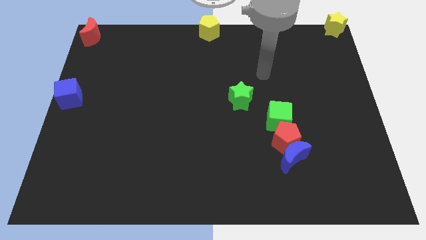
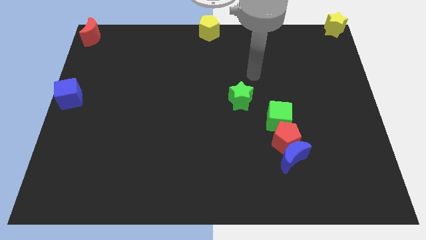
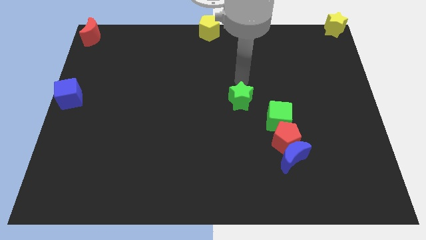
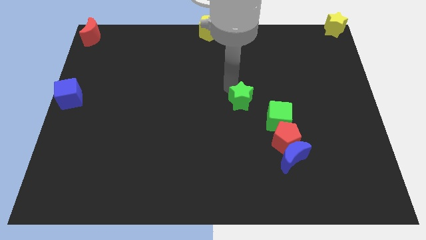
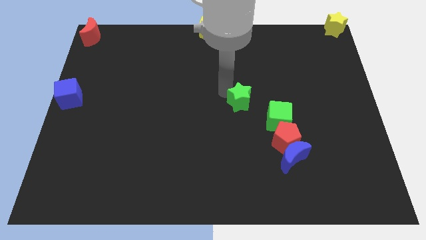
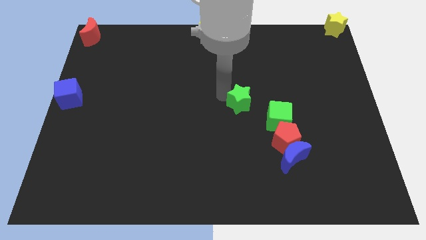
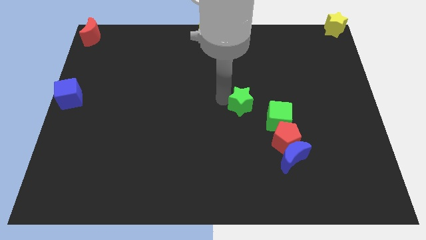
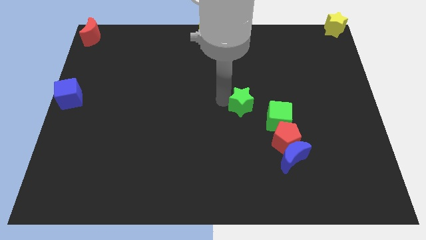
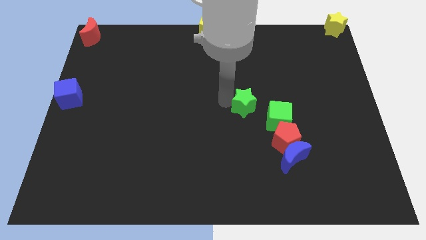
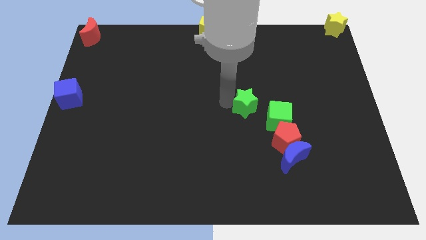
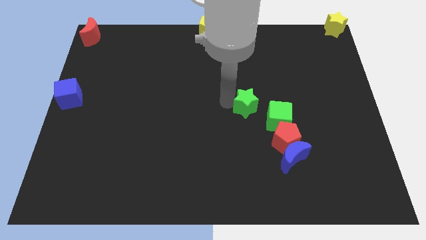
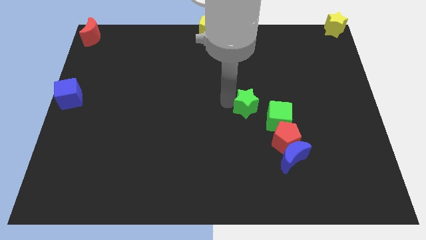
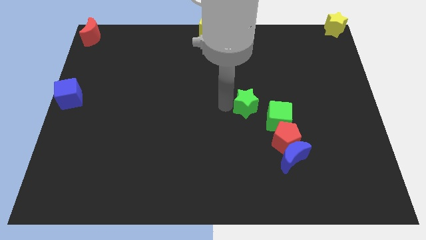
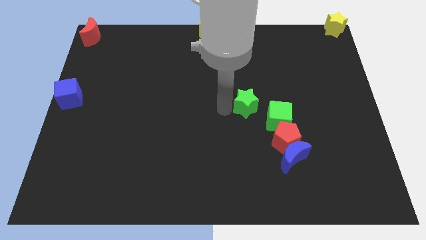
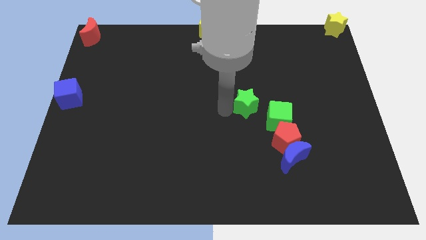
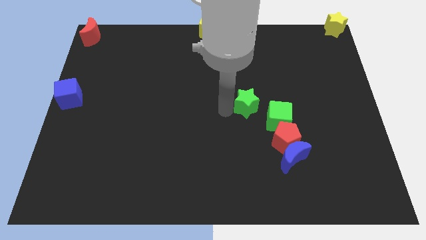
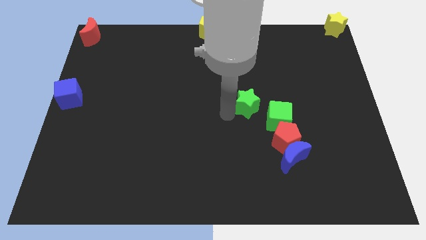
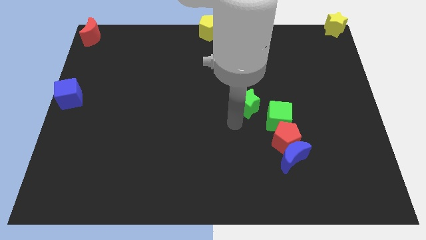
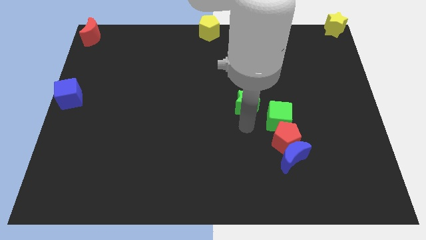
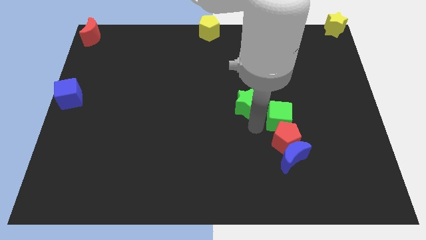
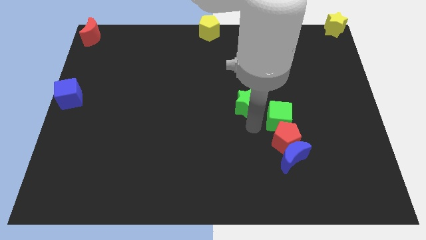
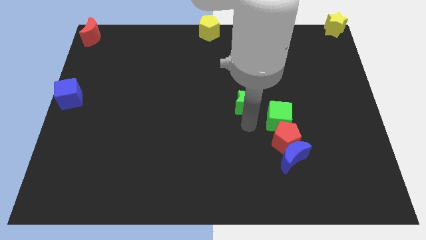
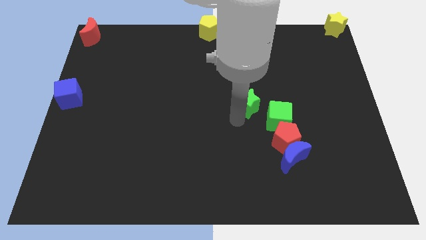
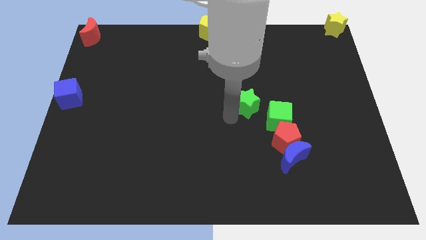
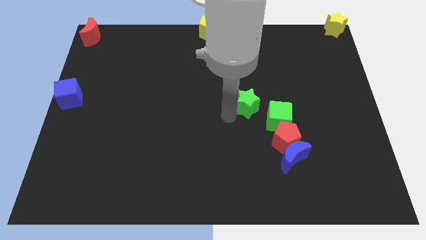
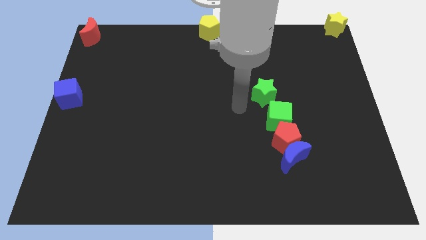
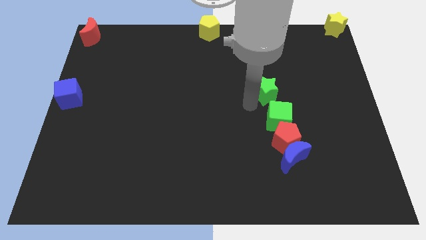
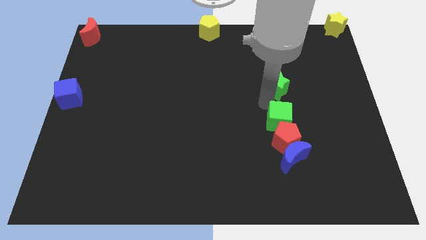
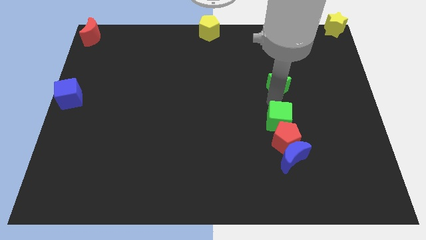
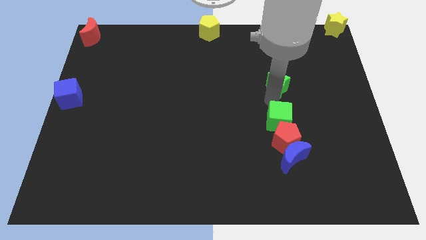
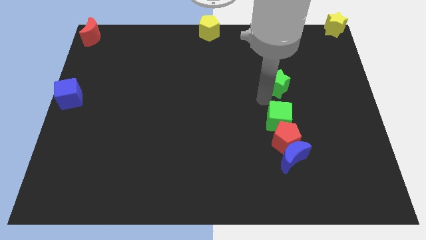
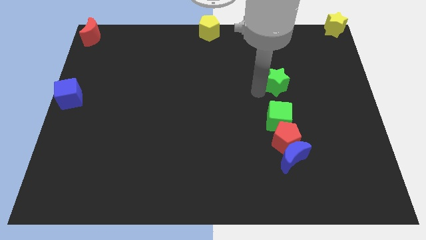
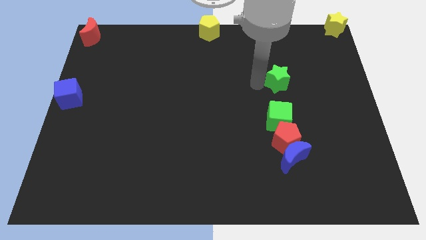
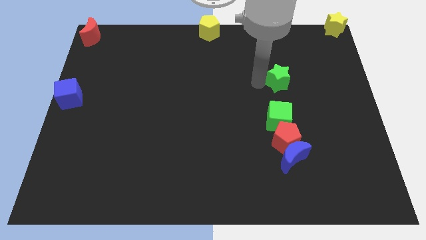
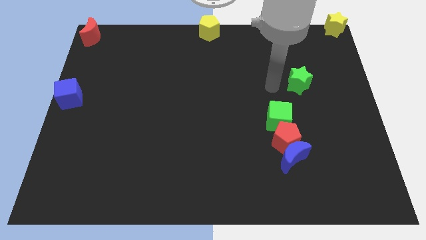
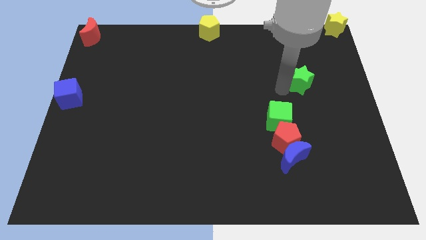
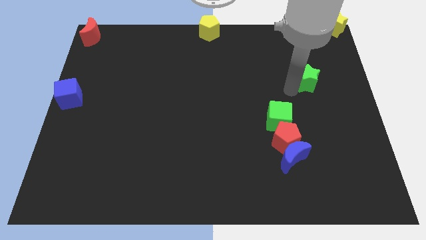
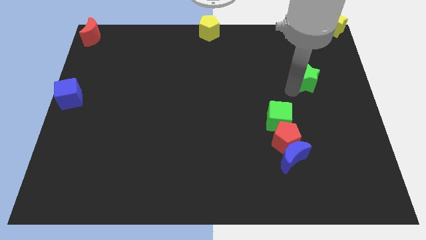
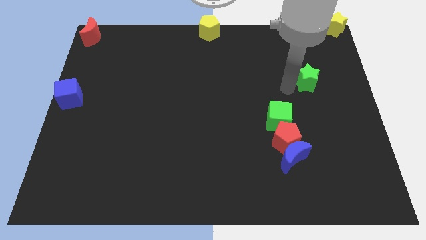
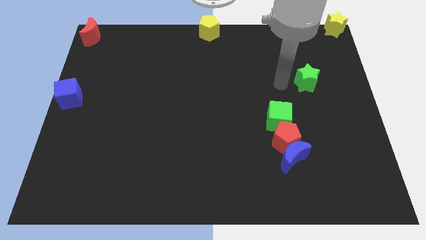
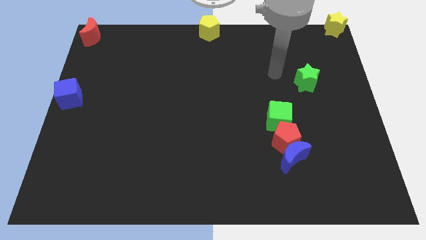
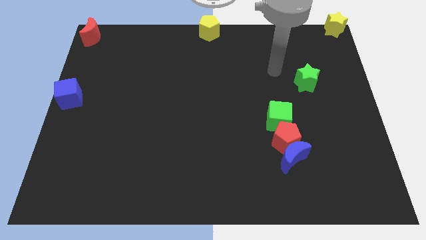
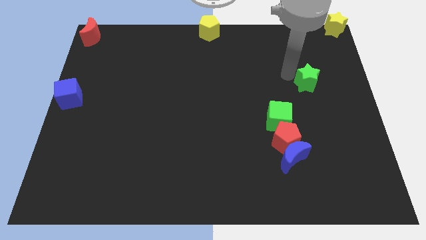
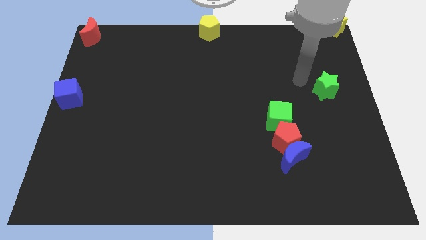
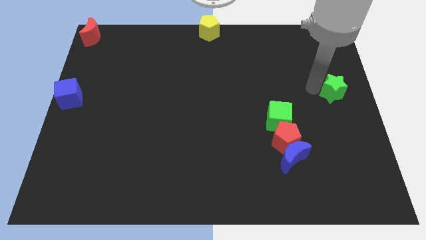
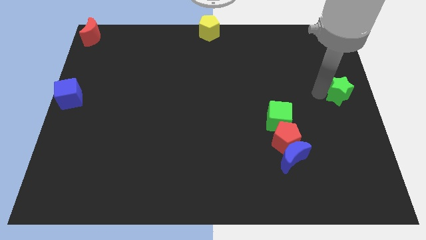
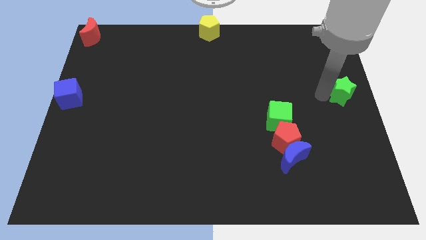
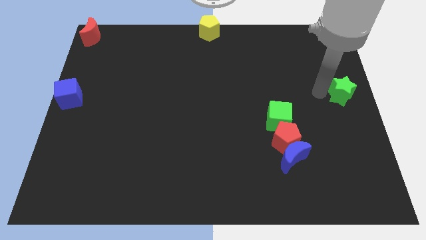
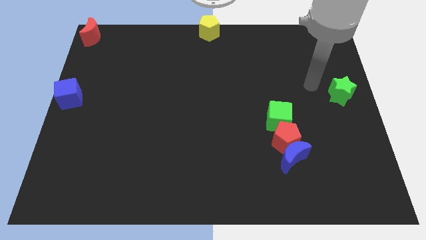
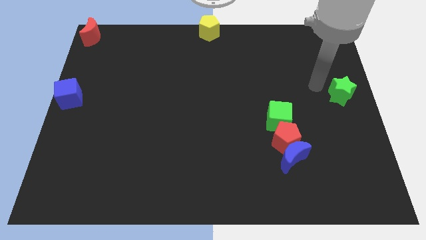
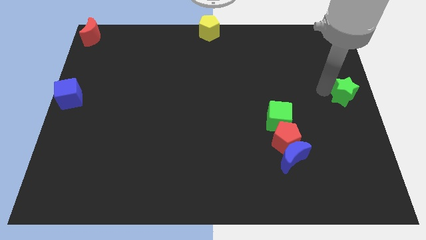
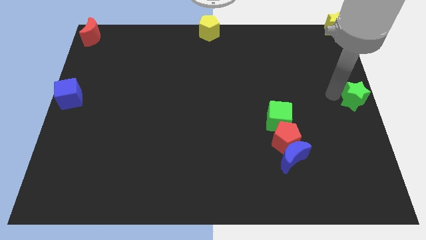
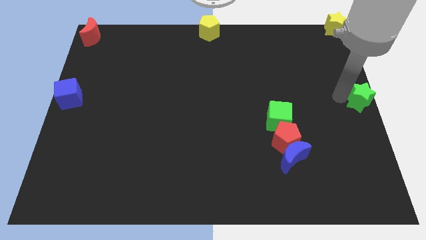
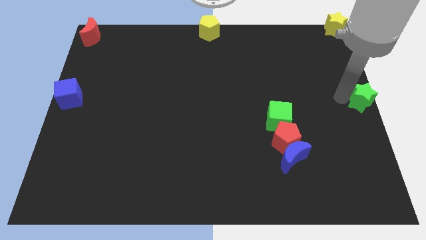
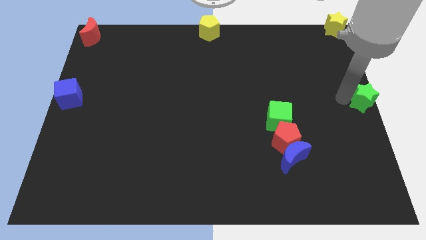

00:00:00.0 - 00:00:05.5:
move green star to the right center corner of the board

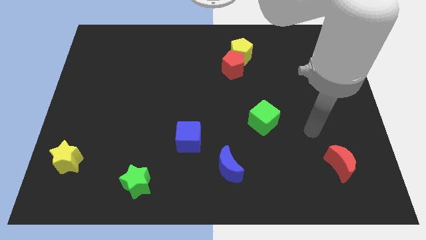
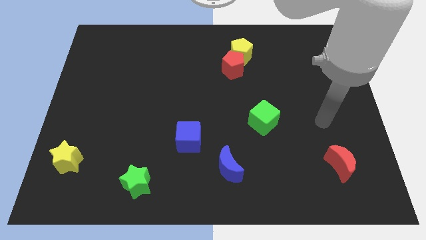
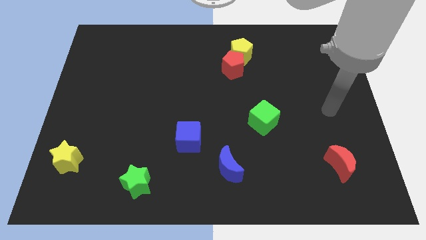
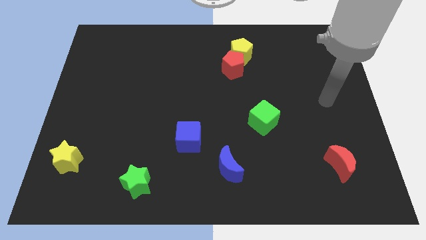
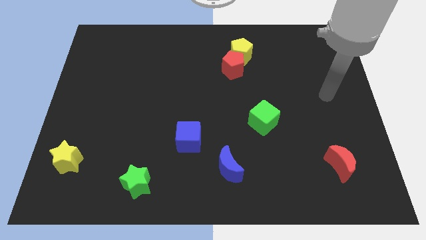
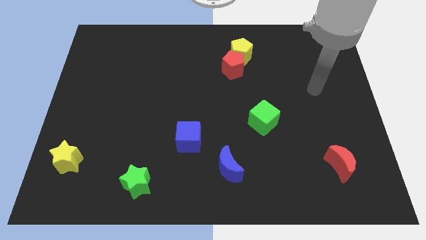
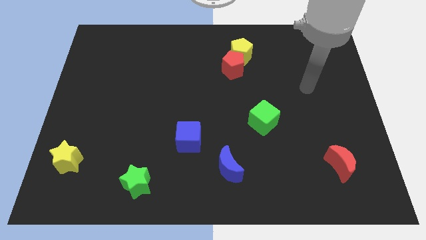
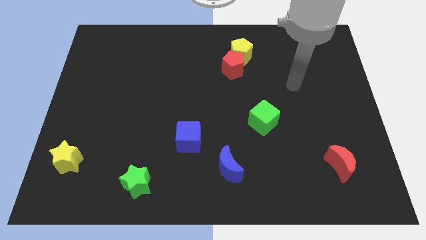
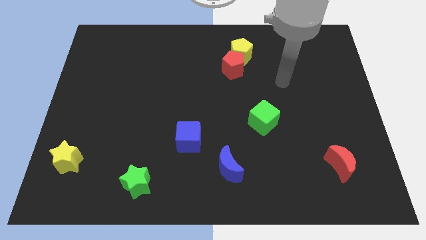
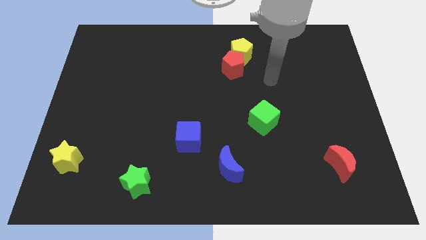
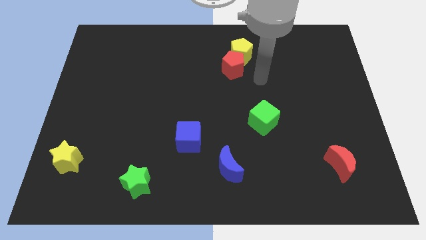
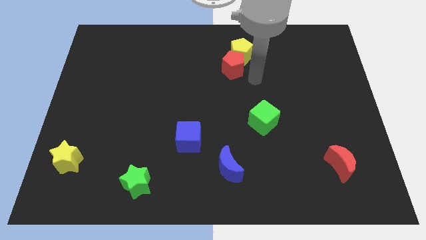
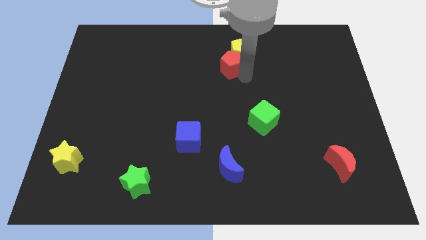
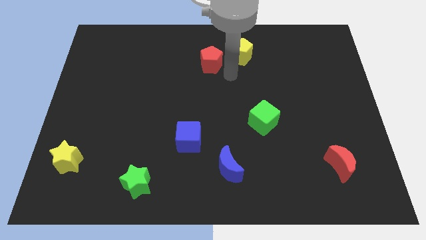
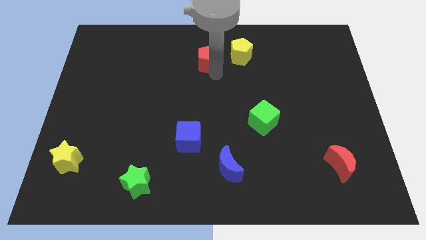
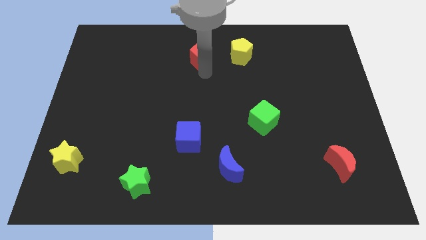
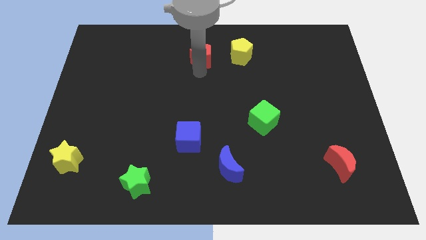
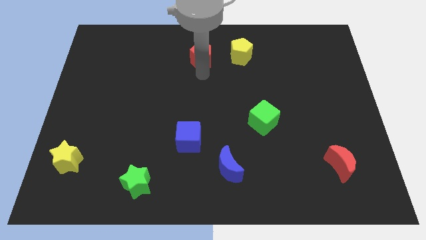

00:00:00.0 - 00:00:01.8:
separate the red pentagon from the yellow pentagon

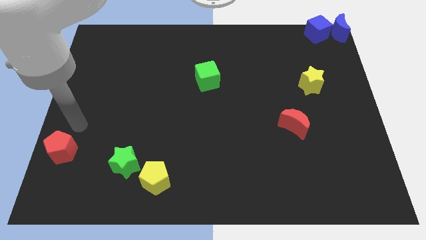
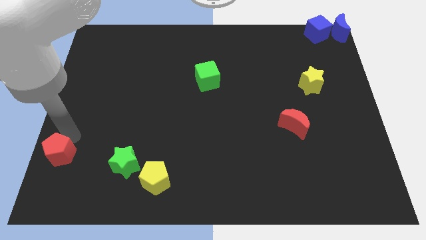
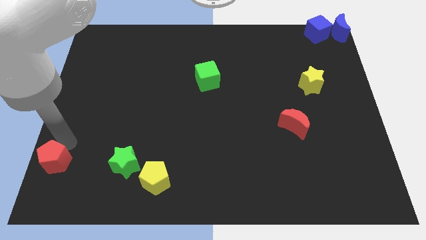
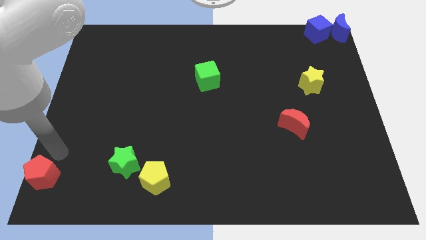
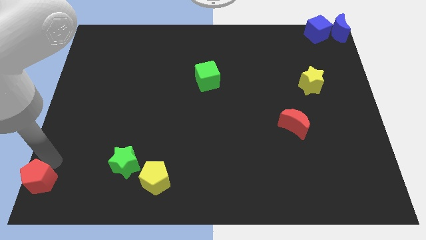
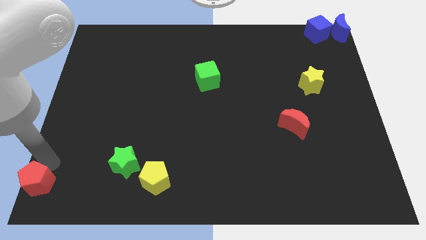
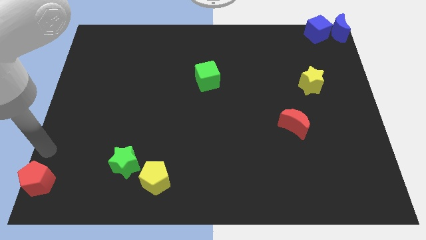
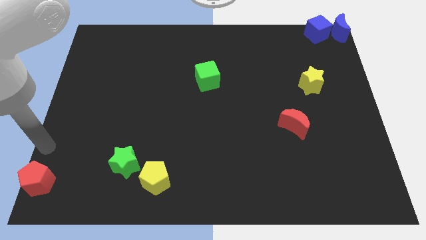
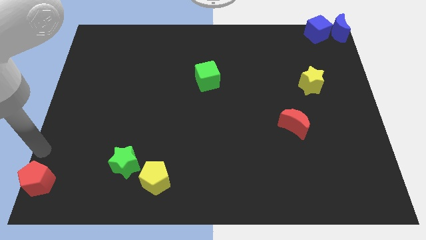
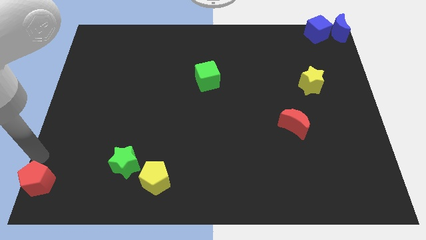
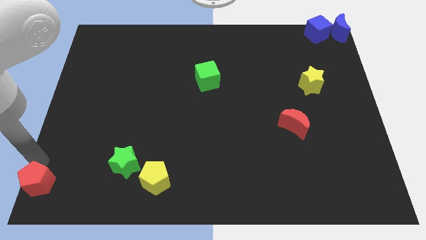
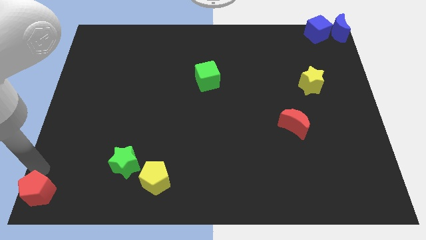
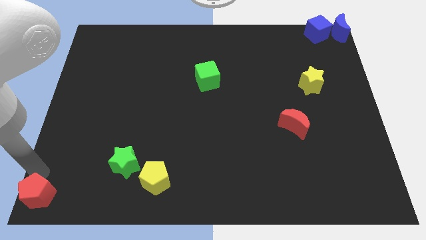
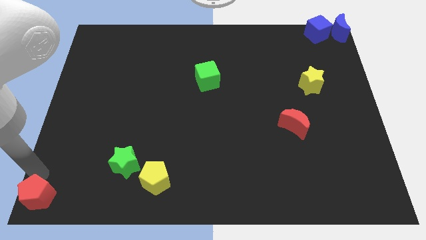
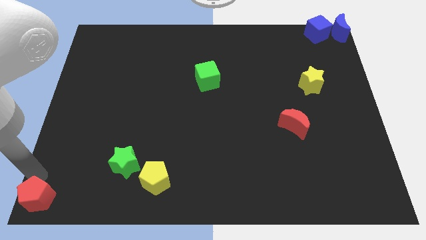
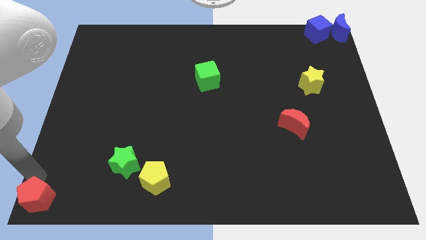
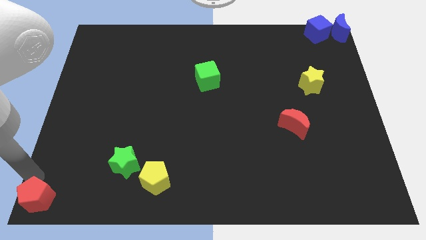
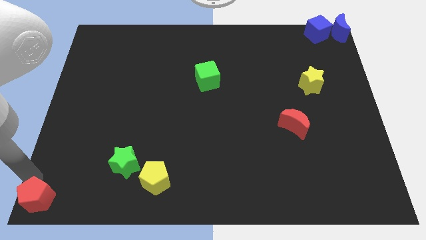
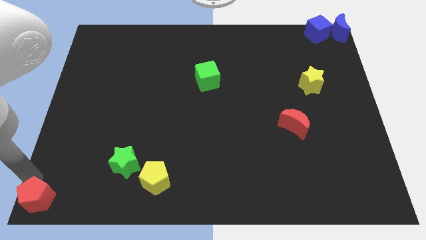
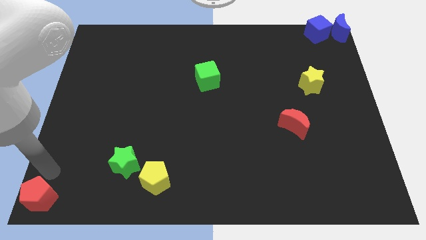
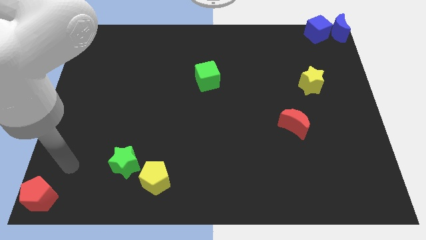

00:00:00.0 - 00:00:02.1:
push the red pentagon to the bottom left corner
